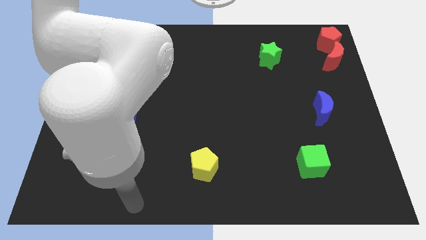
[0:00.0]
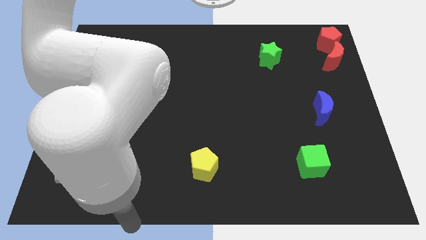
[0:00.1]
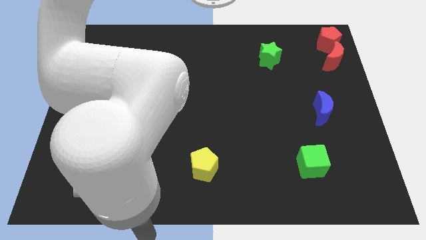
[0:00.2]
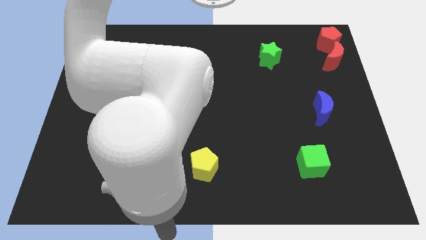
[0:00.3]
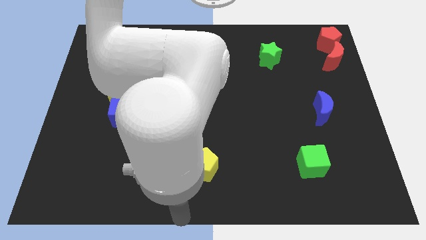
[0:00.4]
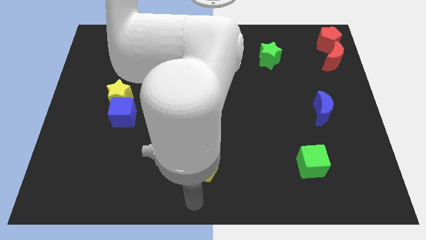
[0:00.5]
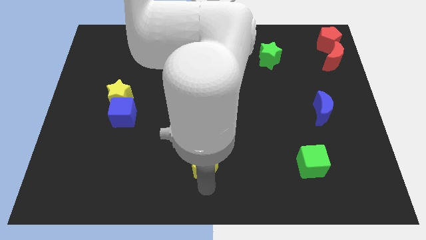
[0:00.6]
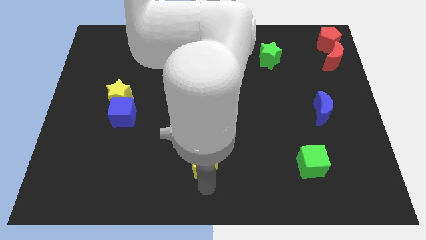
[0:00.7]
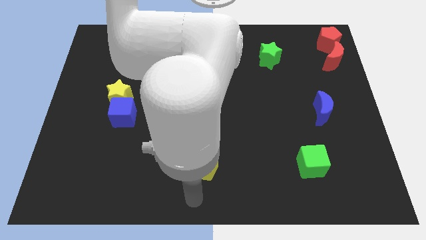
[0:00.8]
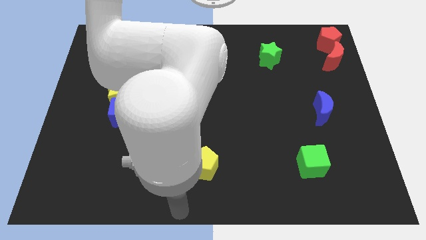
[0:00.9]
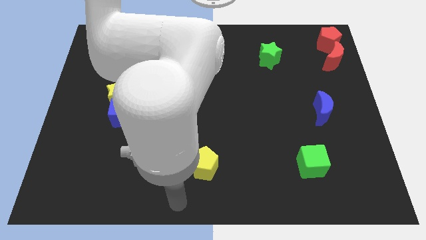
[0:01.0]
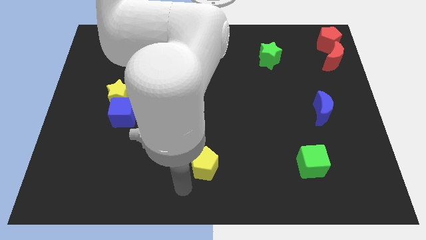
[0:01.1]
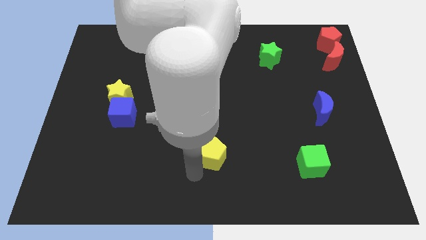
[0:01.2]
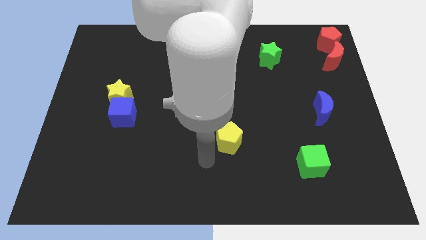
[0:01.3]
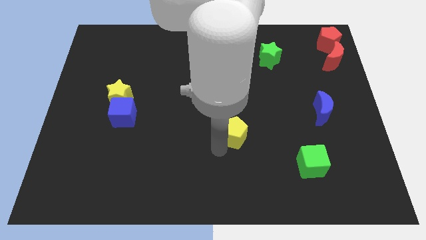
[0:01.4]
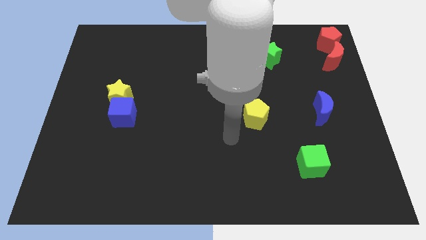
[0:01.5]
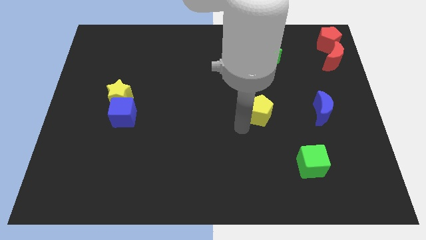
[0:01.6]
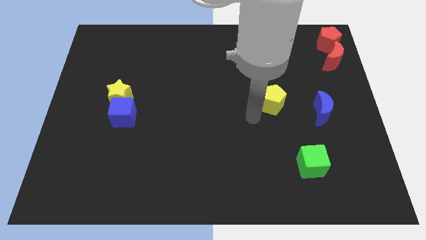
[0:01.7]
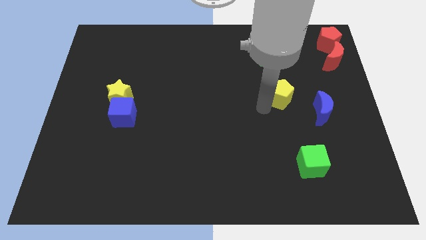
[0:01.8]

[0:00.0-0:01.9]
place the yellow pentagon towards the blue moon
